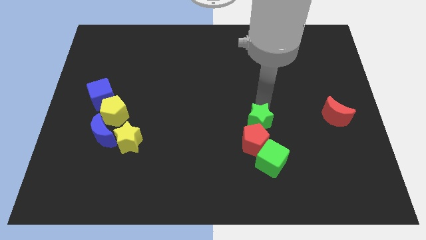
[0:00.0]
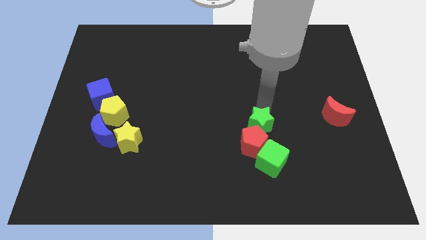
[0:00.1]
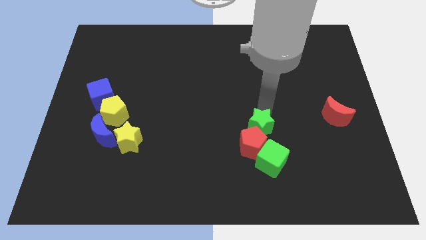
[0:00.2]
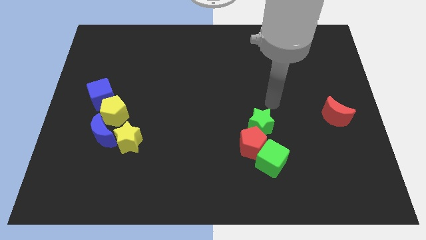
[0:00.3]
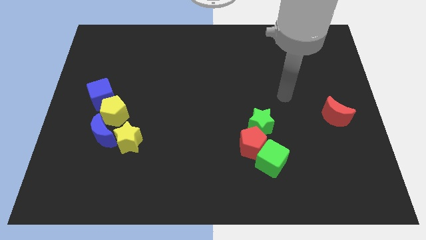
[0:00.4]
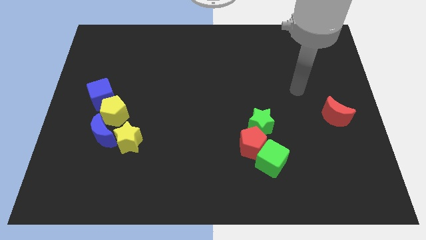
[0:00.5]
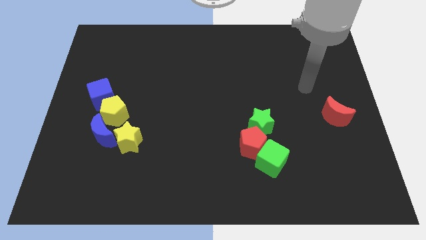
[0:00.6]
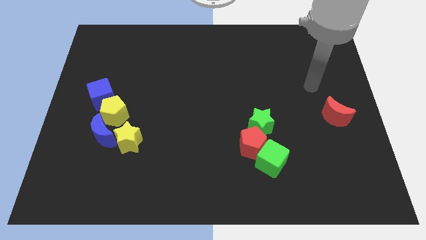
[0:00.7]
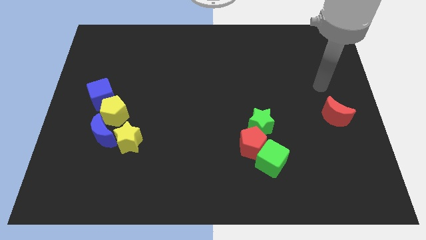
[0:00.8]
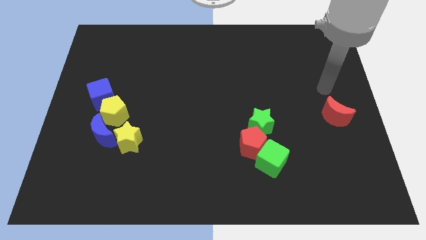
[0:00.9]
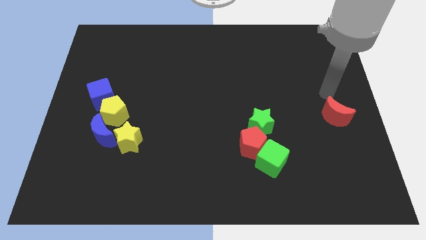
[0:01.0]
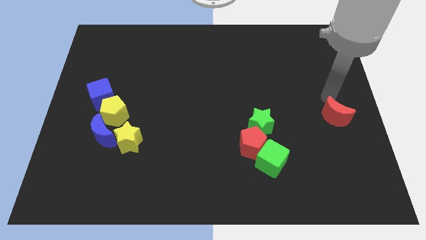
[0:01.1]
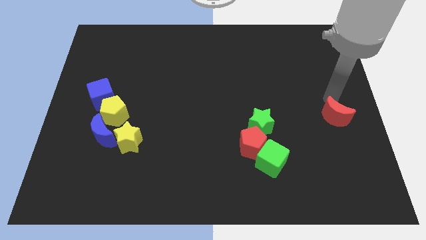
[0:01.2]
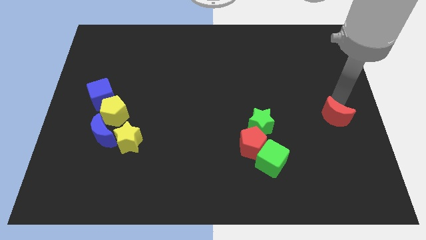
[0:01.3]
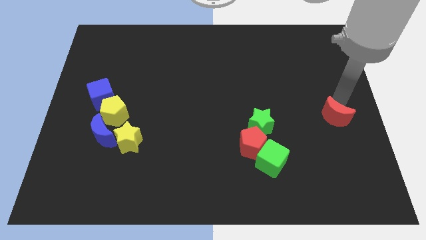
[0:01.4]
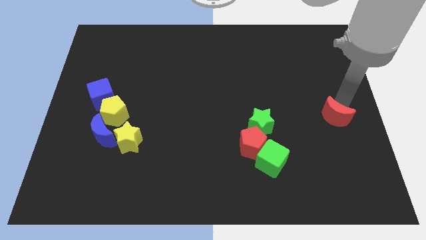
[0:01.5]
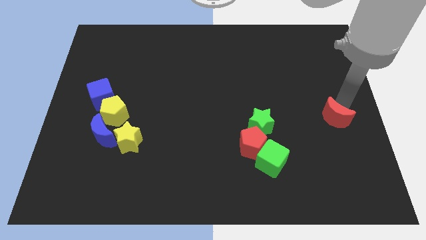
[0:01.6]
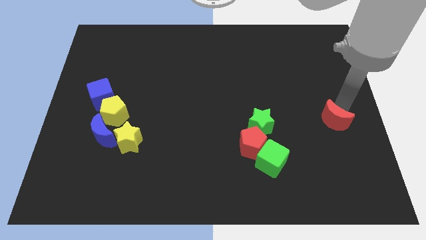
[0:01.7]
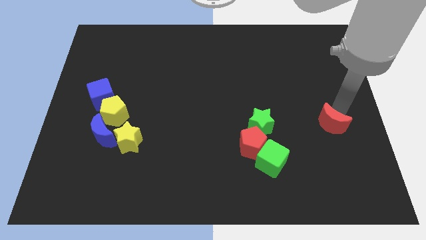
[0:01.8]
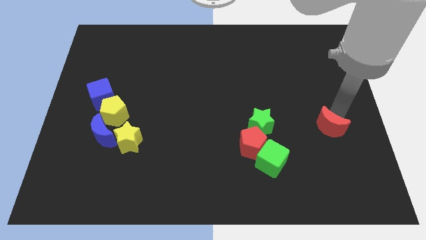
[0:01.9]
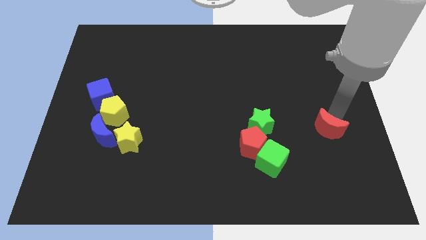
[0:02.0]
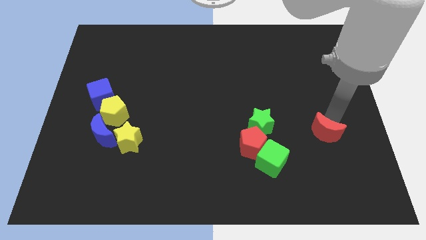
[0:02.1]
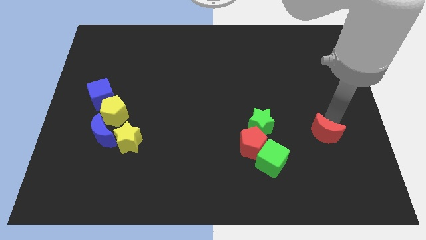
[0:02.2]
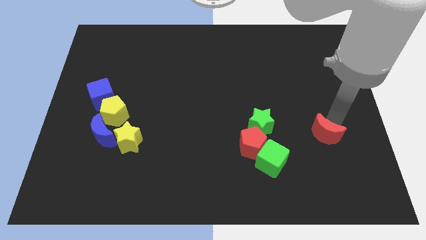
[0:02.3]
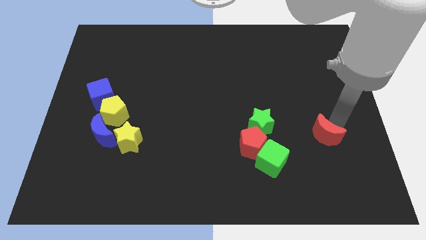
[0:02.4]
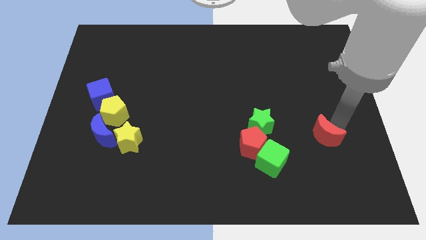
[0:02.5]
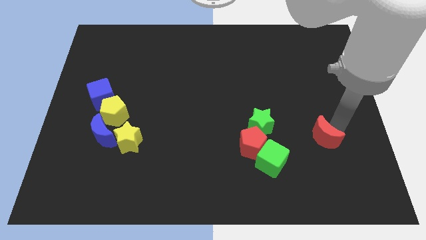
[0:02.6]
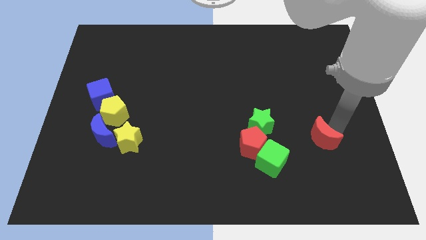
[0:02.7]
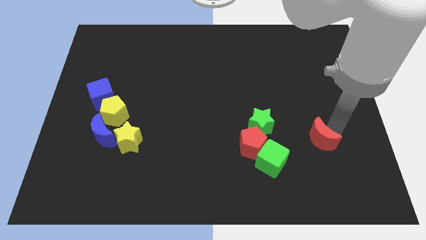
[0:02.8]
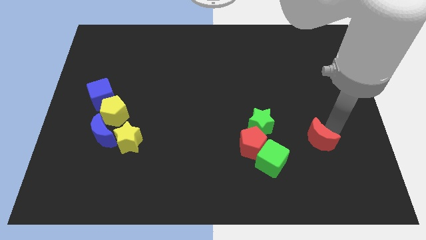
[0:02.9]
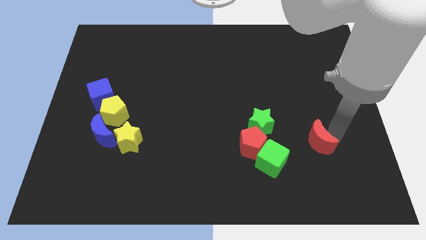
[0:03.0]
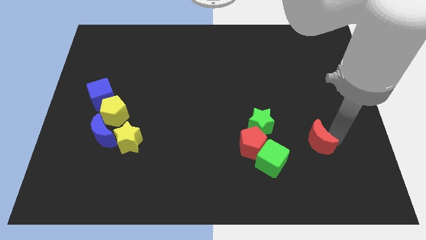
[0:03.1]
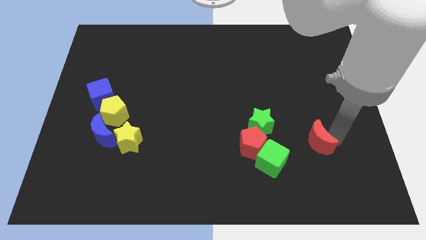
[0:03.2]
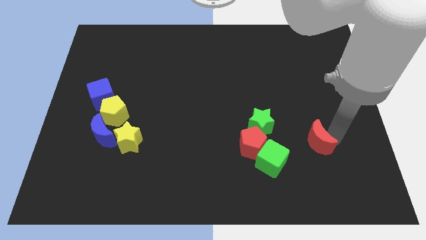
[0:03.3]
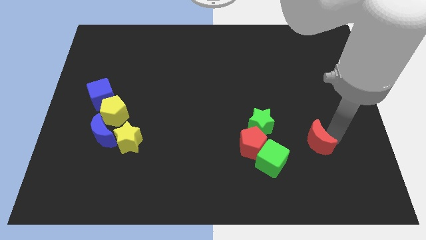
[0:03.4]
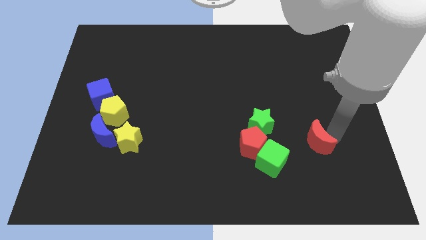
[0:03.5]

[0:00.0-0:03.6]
place the red moon to the right of red pentagon

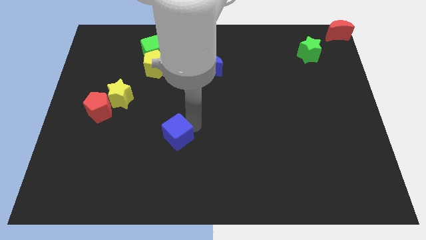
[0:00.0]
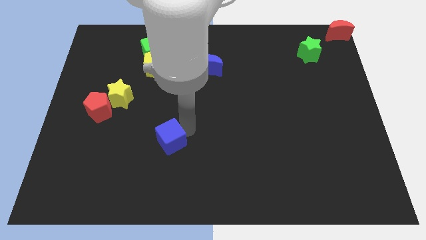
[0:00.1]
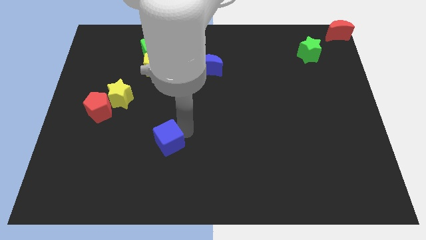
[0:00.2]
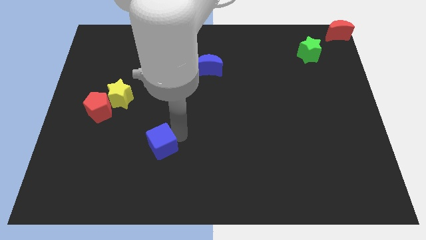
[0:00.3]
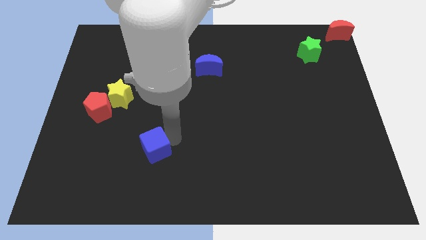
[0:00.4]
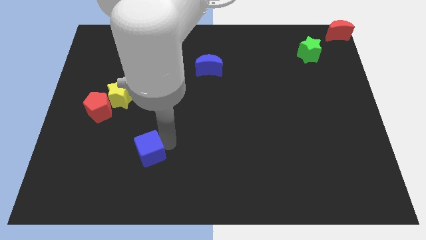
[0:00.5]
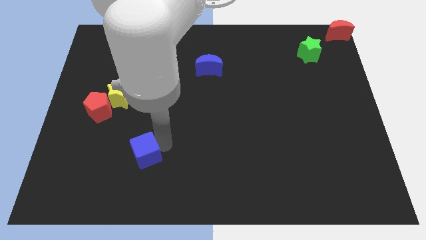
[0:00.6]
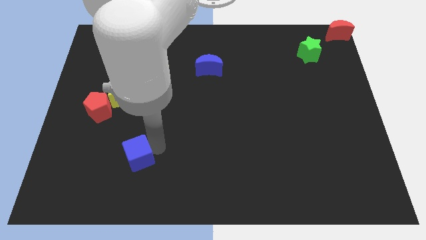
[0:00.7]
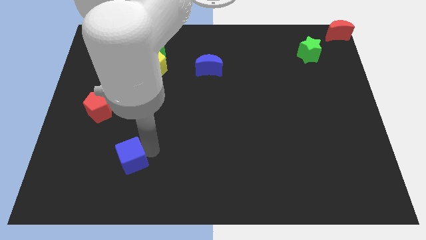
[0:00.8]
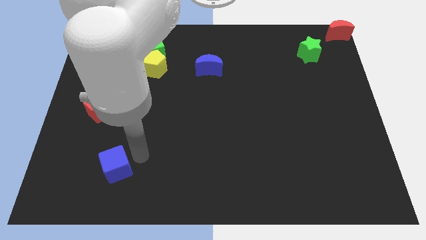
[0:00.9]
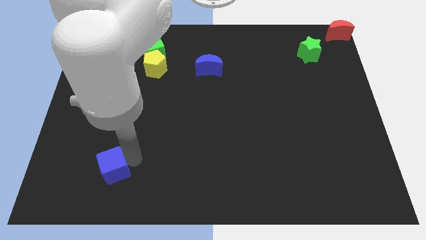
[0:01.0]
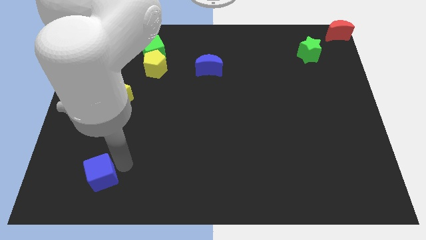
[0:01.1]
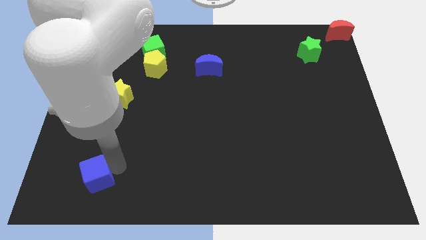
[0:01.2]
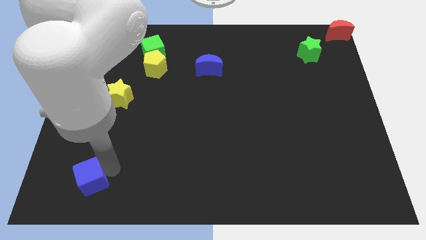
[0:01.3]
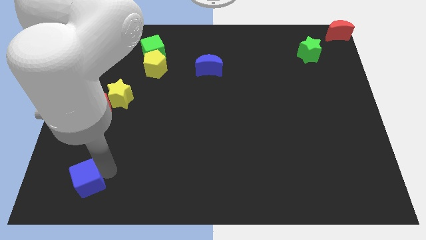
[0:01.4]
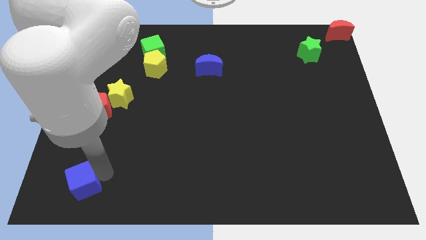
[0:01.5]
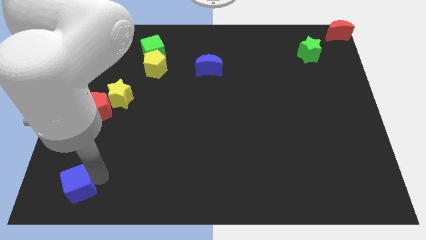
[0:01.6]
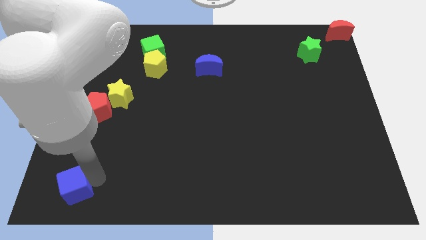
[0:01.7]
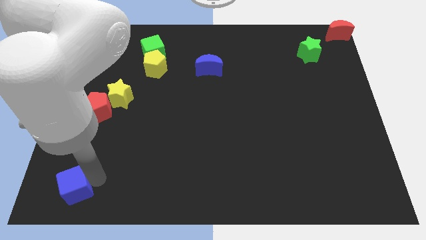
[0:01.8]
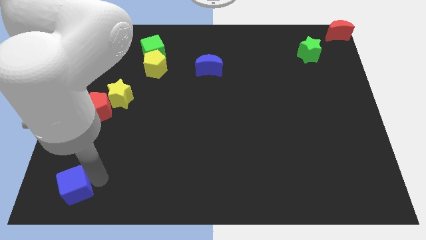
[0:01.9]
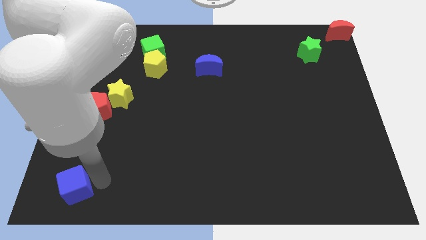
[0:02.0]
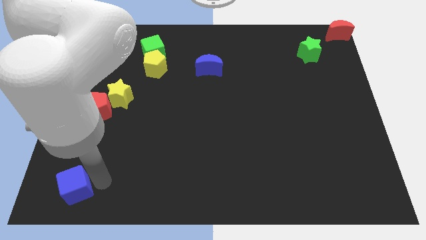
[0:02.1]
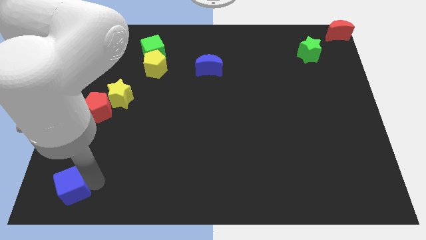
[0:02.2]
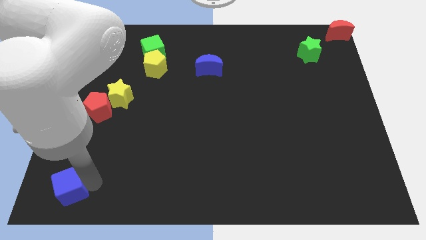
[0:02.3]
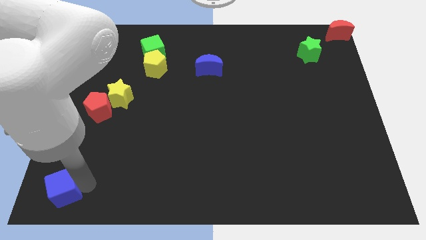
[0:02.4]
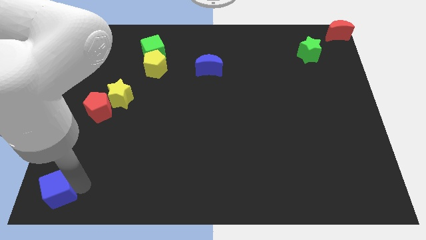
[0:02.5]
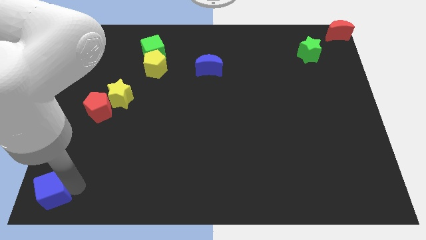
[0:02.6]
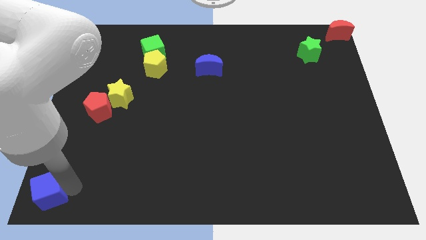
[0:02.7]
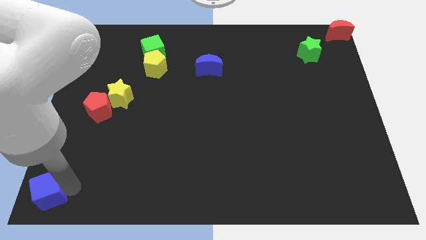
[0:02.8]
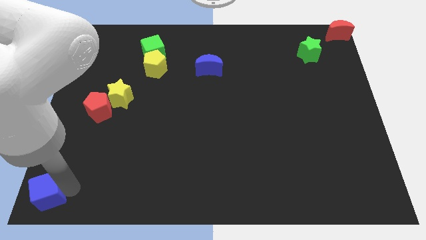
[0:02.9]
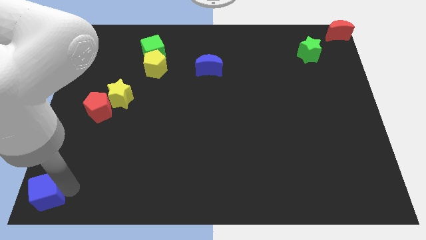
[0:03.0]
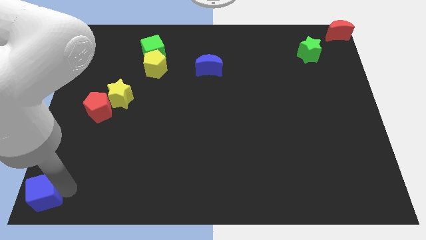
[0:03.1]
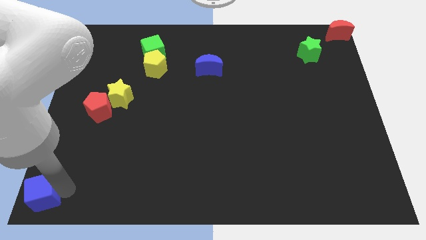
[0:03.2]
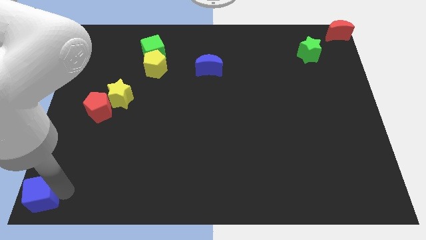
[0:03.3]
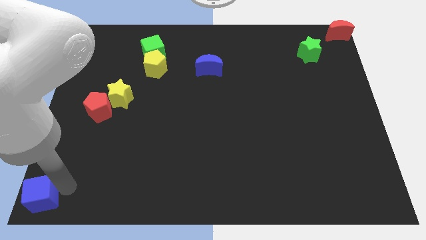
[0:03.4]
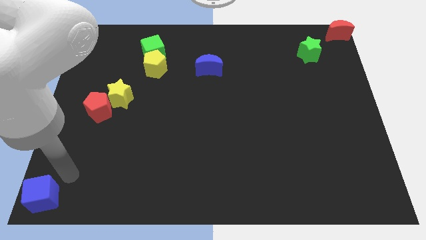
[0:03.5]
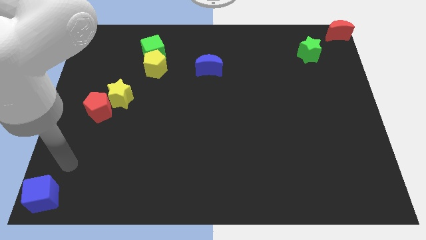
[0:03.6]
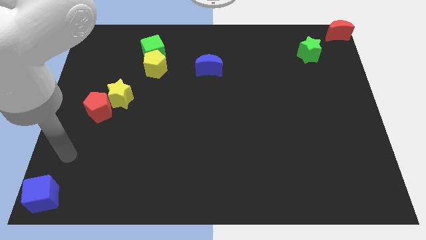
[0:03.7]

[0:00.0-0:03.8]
place the blue cube to the bottom left corner

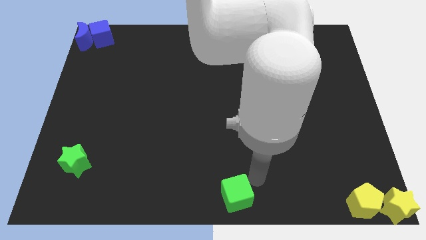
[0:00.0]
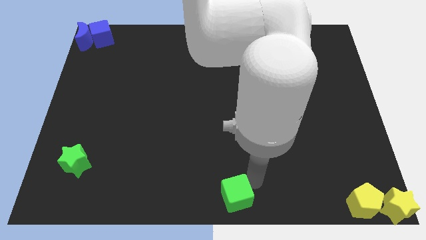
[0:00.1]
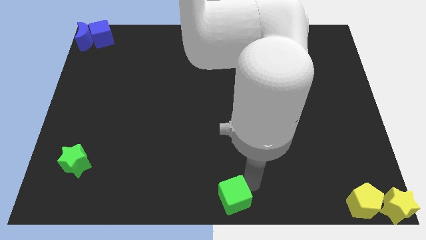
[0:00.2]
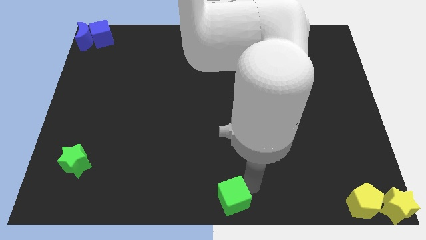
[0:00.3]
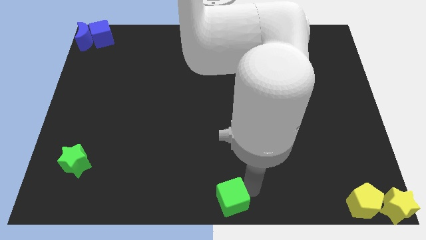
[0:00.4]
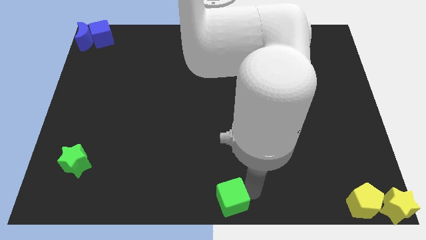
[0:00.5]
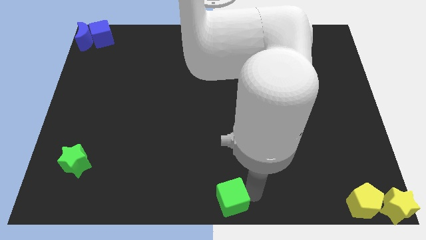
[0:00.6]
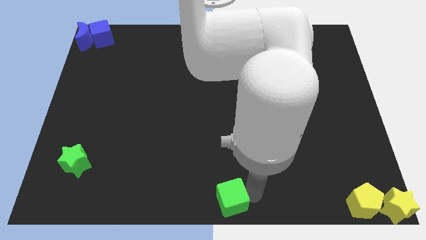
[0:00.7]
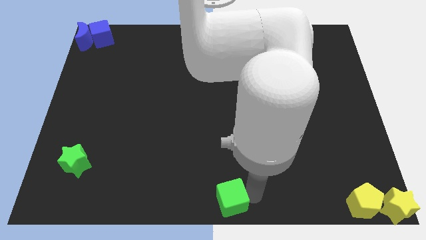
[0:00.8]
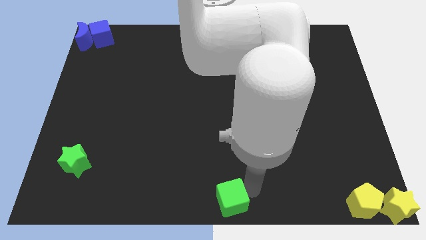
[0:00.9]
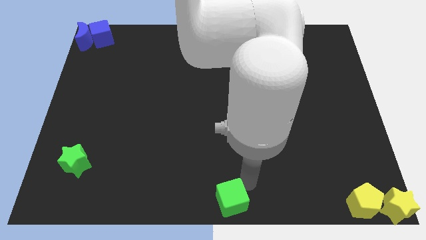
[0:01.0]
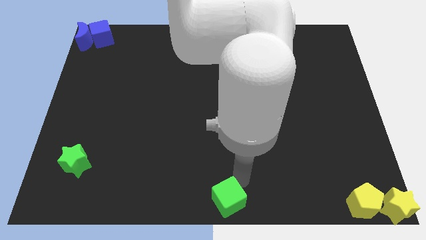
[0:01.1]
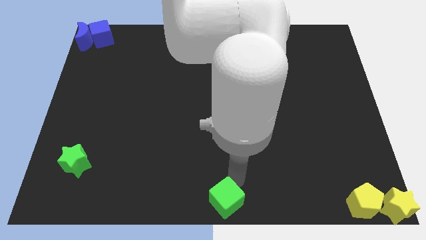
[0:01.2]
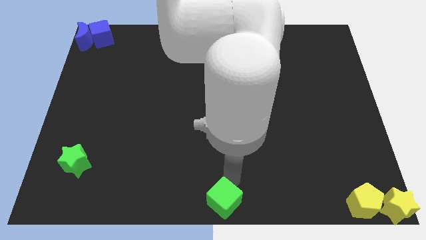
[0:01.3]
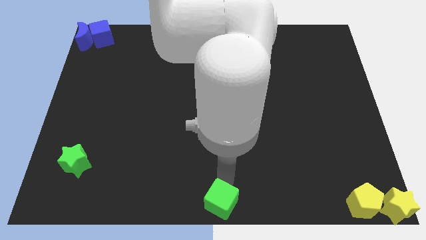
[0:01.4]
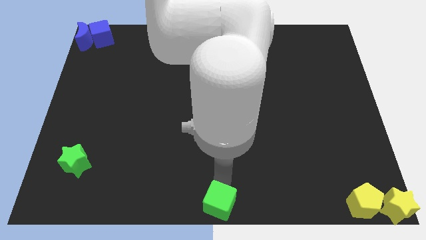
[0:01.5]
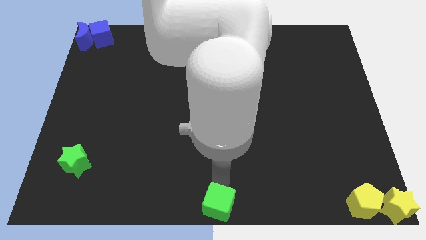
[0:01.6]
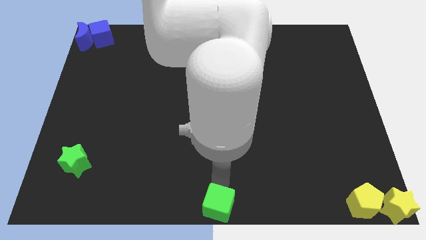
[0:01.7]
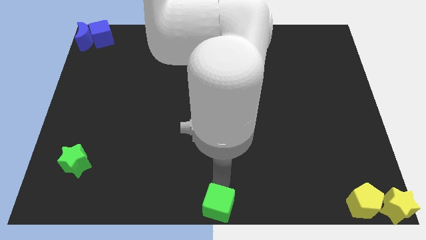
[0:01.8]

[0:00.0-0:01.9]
move the green cube to the middle bottom
